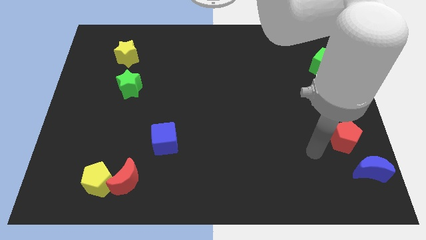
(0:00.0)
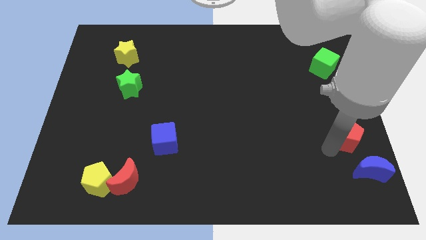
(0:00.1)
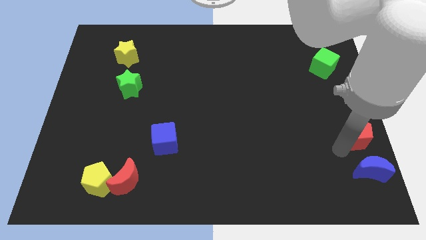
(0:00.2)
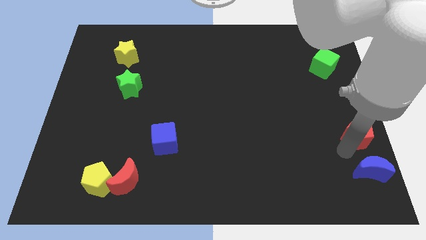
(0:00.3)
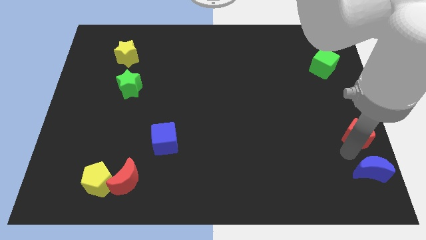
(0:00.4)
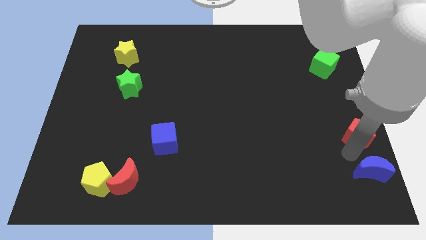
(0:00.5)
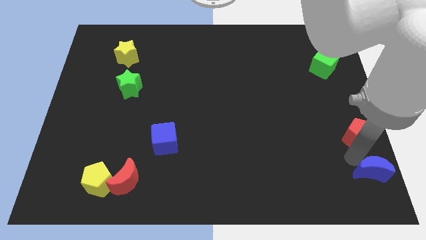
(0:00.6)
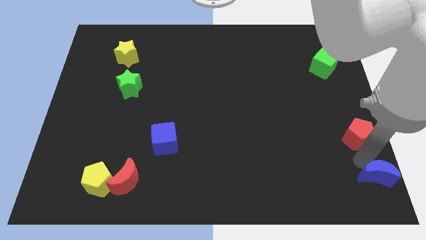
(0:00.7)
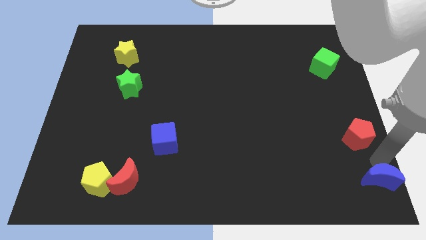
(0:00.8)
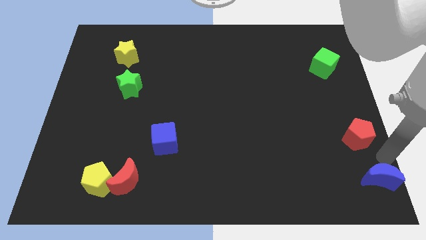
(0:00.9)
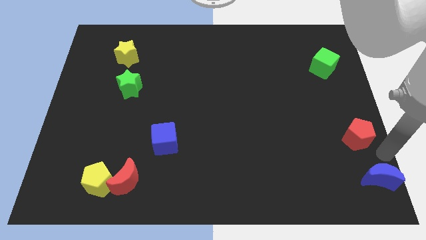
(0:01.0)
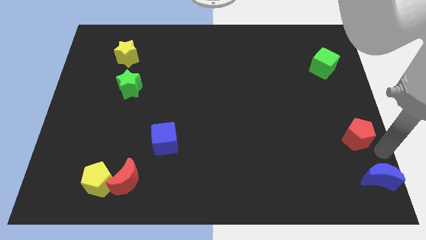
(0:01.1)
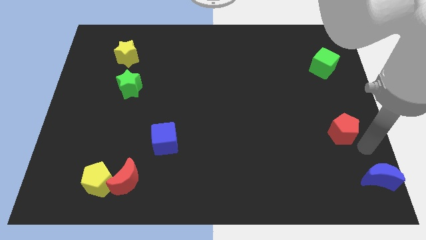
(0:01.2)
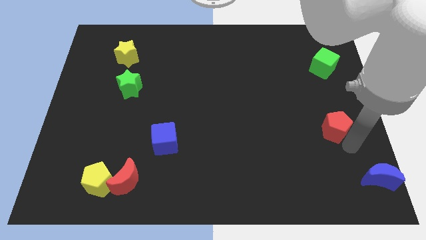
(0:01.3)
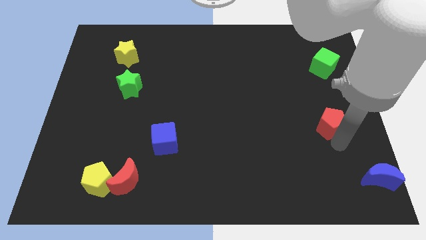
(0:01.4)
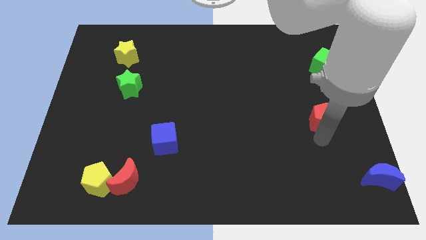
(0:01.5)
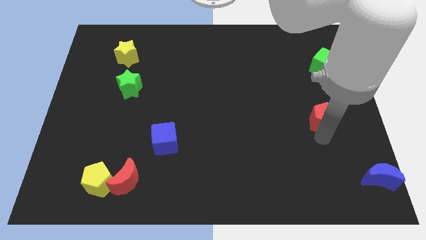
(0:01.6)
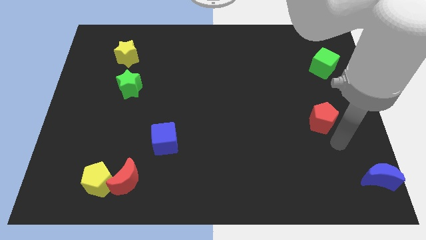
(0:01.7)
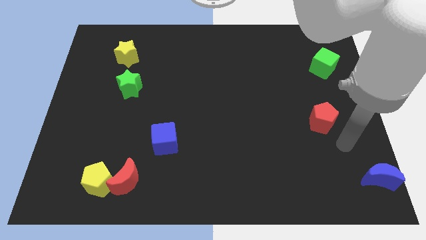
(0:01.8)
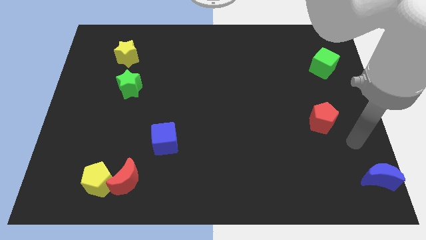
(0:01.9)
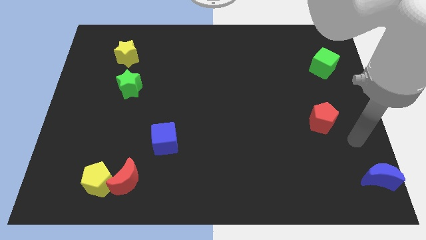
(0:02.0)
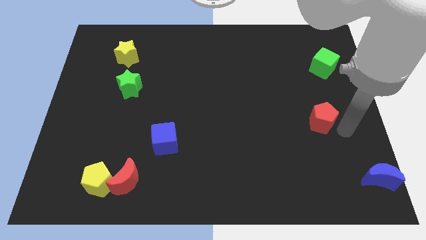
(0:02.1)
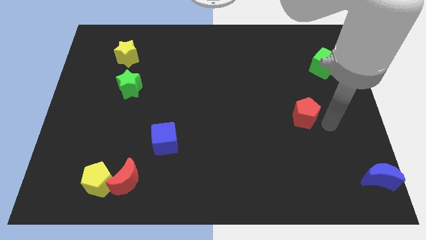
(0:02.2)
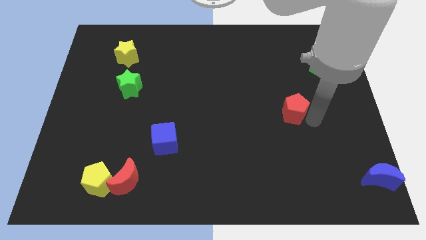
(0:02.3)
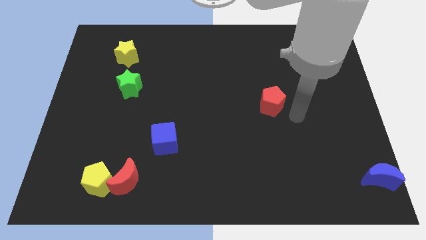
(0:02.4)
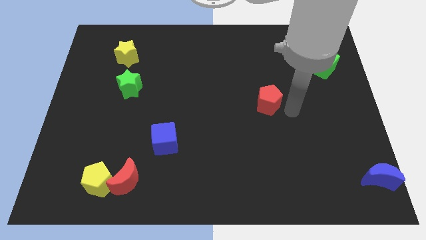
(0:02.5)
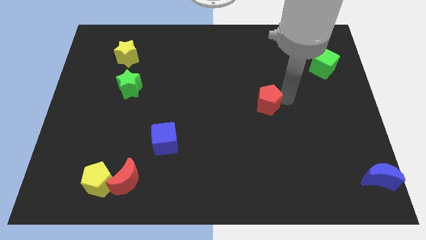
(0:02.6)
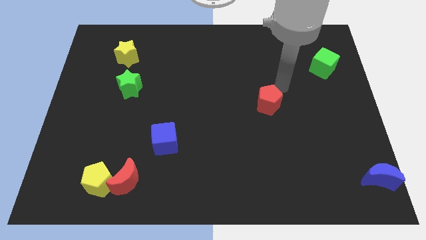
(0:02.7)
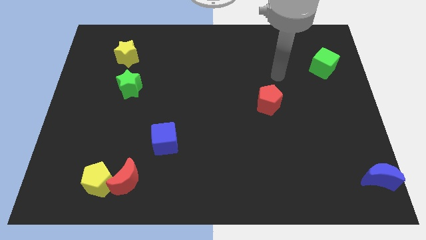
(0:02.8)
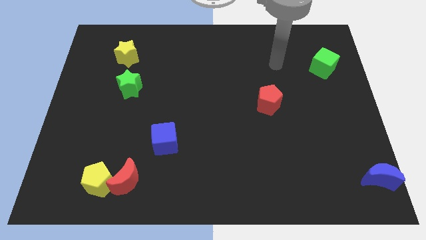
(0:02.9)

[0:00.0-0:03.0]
move the red pentagon at the bottom left side of the green cube

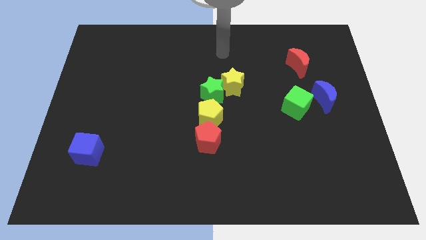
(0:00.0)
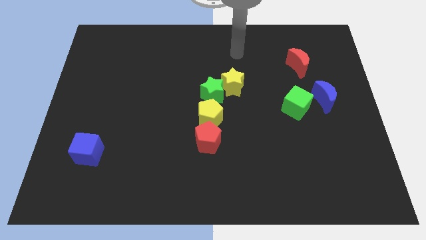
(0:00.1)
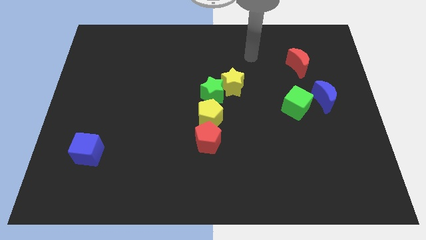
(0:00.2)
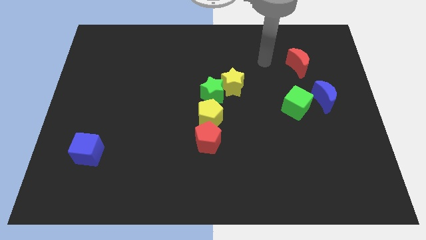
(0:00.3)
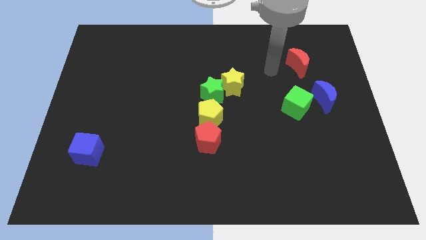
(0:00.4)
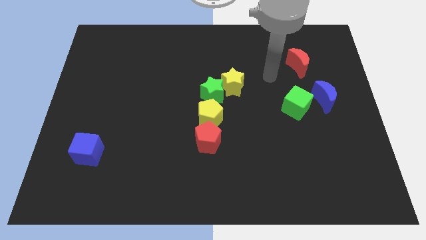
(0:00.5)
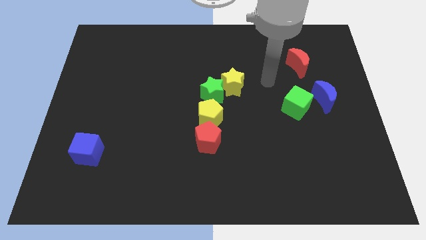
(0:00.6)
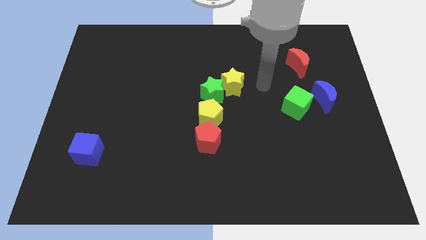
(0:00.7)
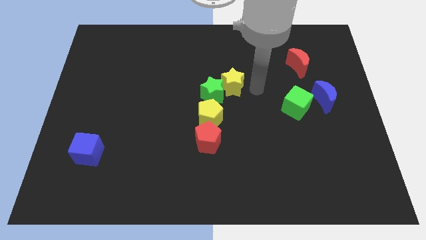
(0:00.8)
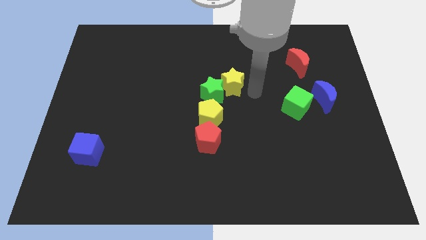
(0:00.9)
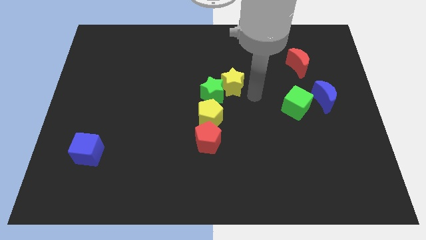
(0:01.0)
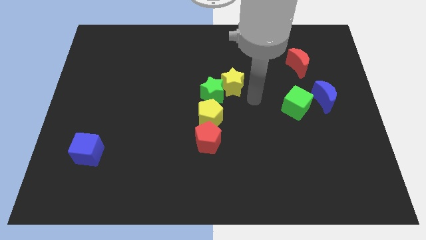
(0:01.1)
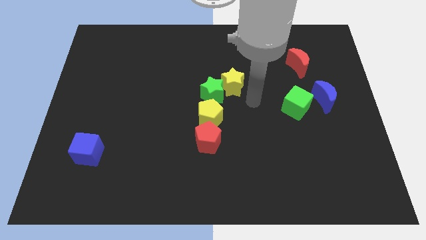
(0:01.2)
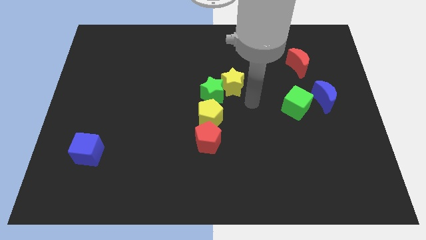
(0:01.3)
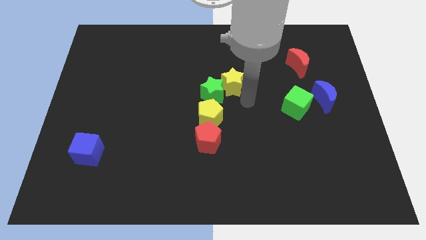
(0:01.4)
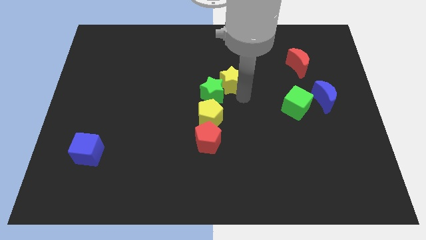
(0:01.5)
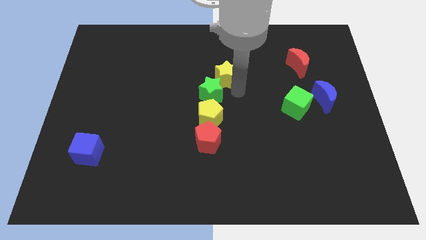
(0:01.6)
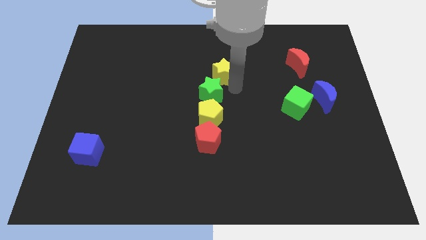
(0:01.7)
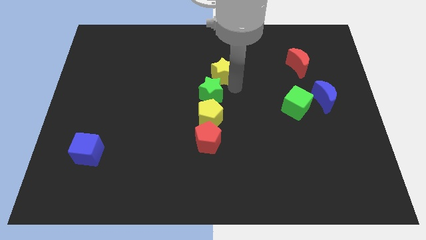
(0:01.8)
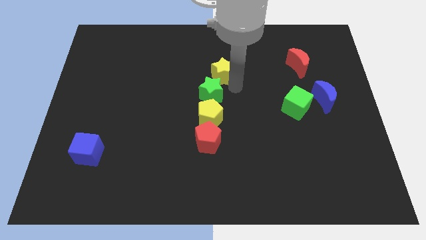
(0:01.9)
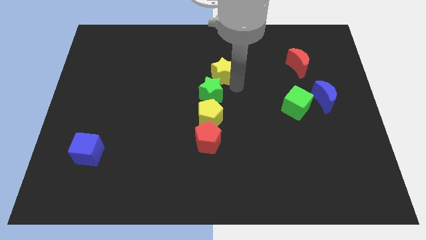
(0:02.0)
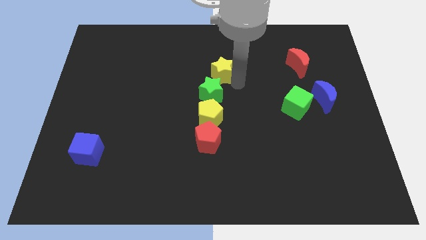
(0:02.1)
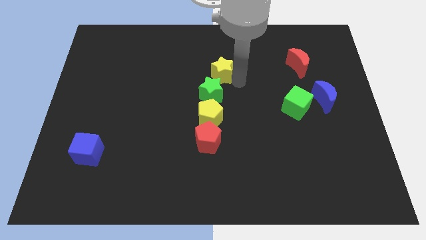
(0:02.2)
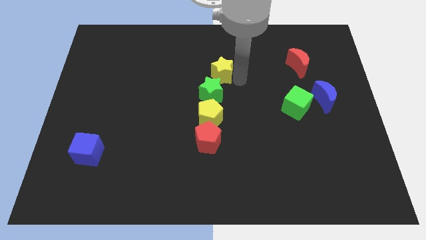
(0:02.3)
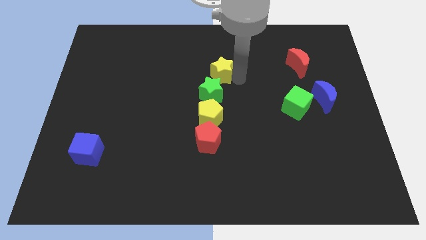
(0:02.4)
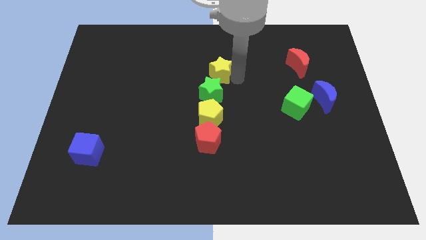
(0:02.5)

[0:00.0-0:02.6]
move the yellow star above the green star

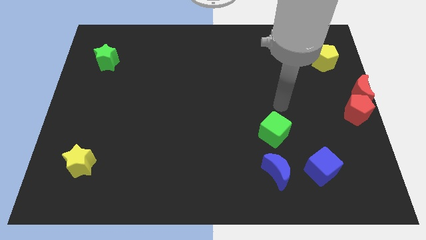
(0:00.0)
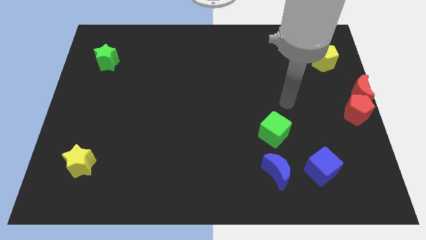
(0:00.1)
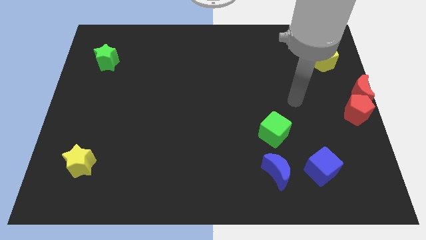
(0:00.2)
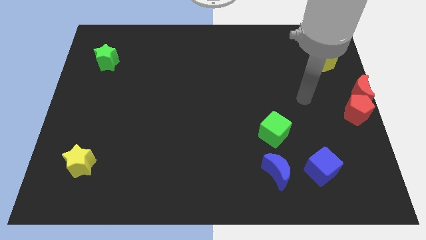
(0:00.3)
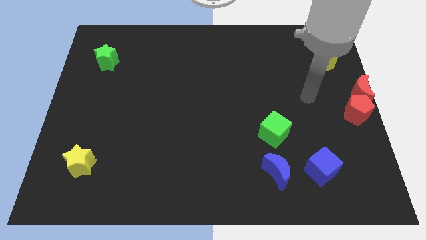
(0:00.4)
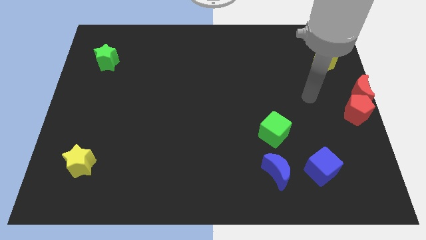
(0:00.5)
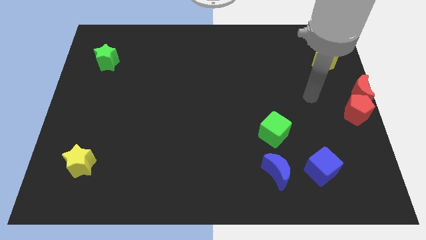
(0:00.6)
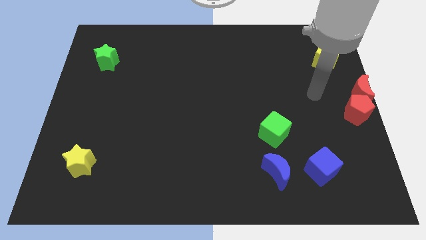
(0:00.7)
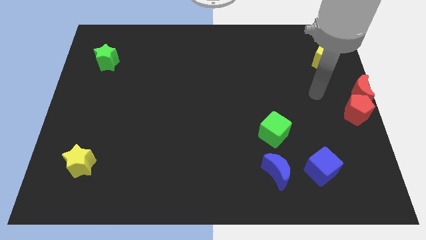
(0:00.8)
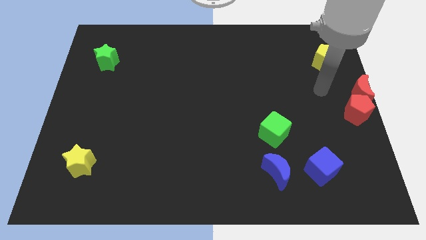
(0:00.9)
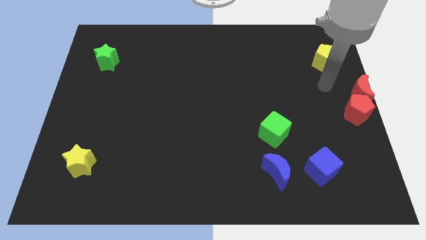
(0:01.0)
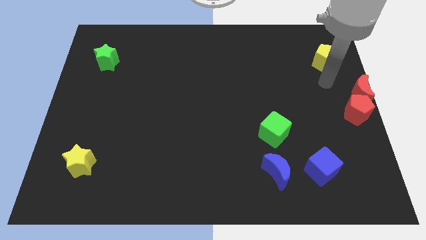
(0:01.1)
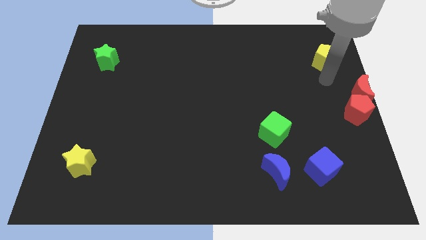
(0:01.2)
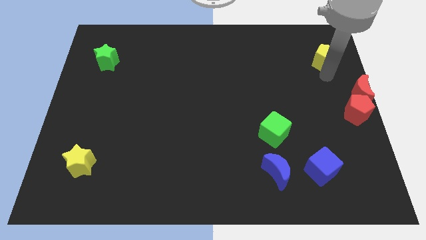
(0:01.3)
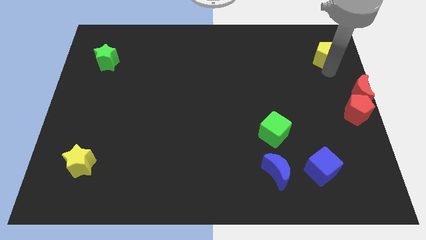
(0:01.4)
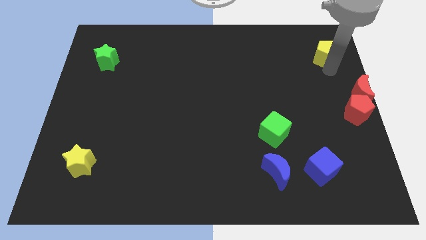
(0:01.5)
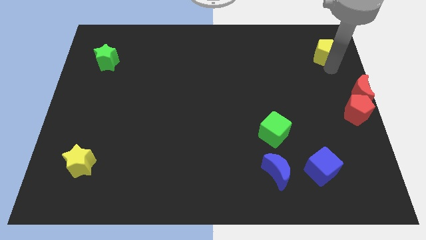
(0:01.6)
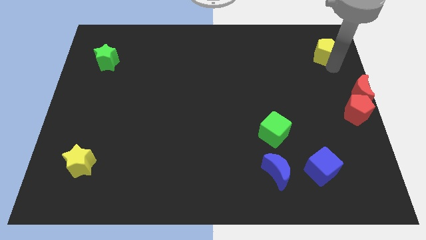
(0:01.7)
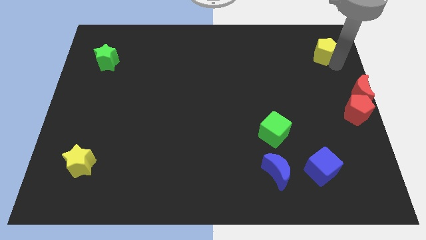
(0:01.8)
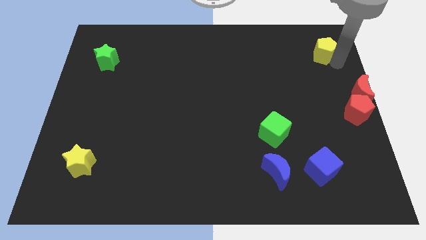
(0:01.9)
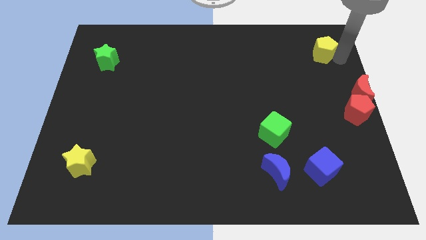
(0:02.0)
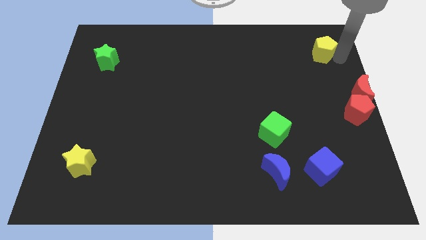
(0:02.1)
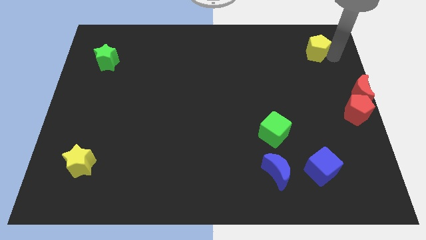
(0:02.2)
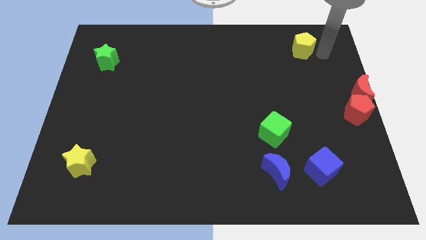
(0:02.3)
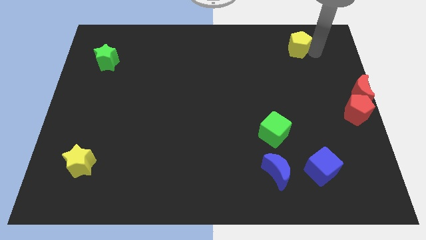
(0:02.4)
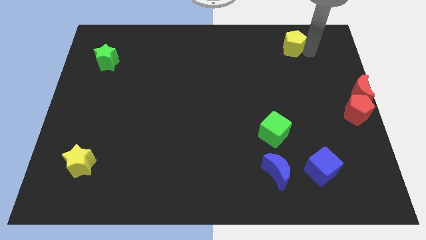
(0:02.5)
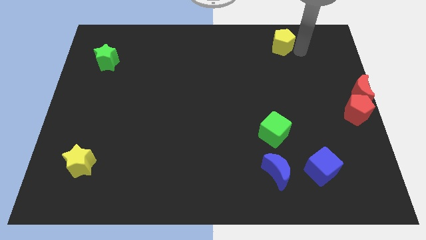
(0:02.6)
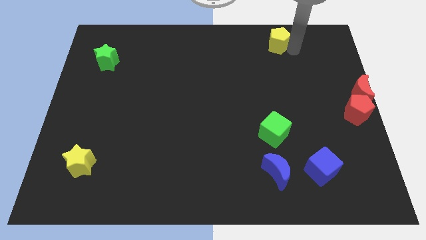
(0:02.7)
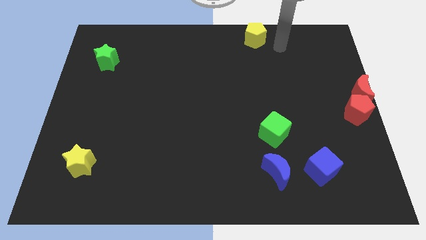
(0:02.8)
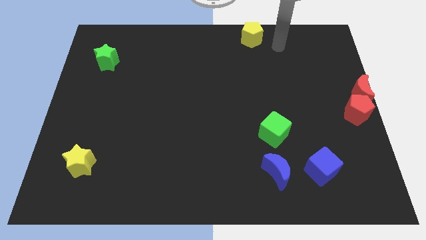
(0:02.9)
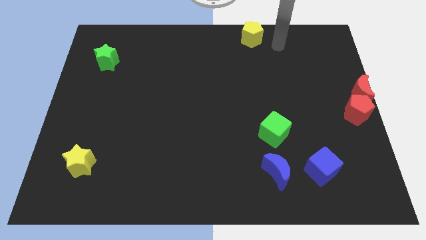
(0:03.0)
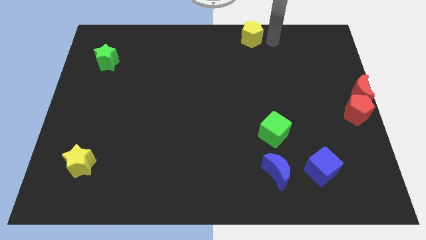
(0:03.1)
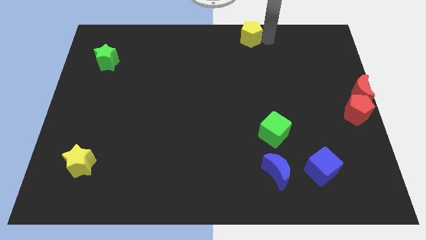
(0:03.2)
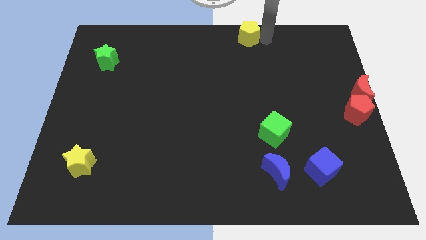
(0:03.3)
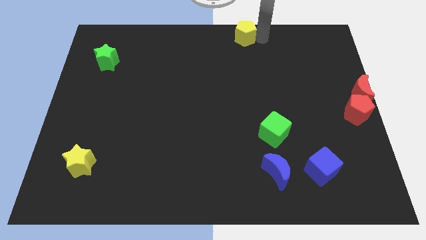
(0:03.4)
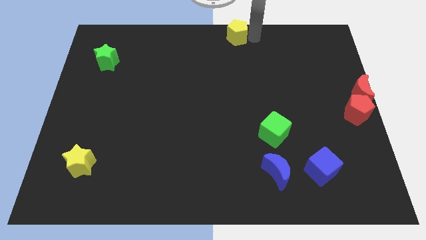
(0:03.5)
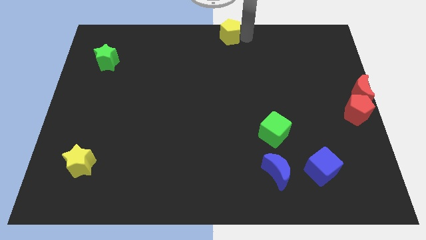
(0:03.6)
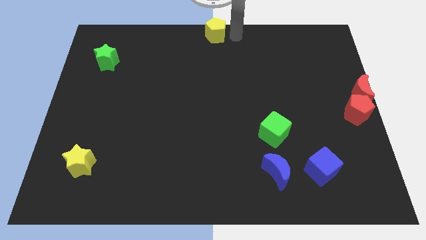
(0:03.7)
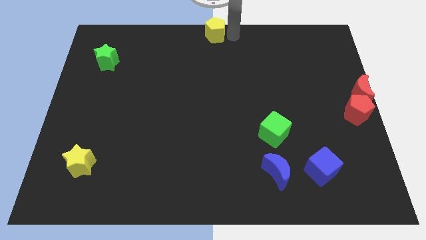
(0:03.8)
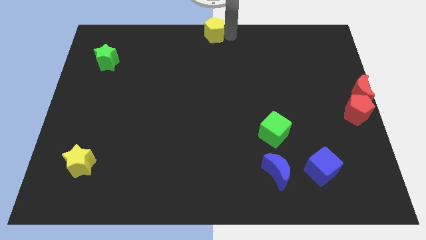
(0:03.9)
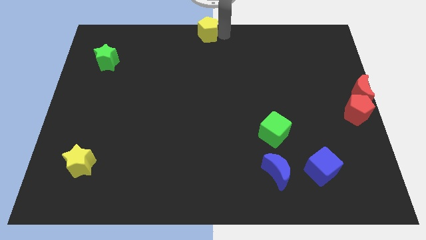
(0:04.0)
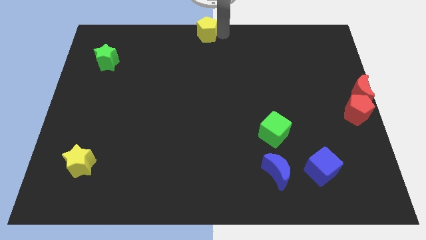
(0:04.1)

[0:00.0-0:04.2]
drag the yellow pentagon at the top center
